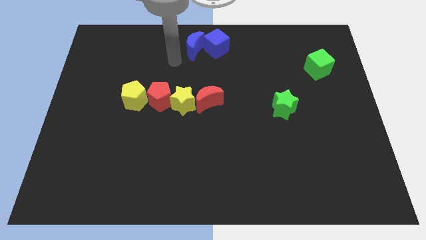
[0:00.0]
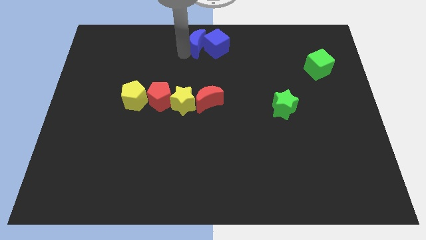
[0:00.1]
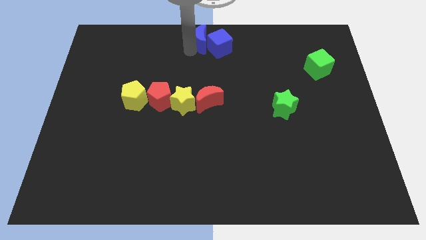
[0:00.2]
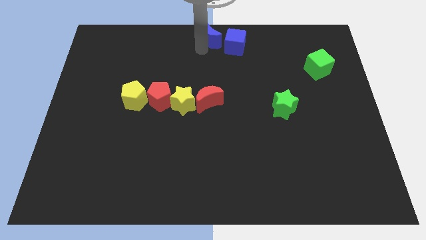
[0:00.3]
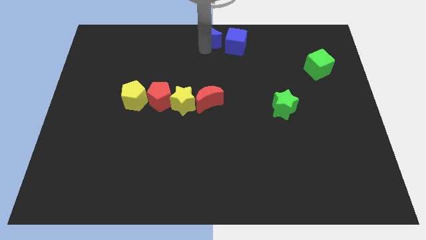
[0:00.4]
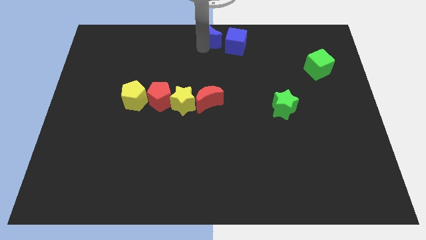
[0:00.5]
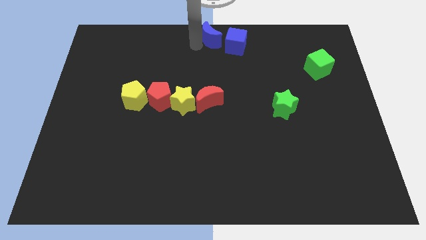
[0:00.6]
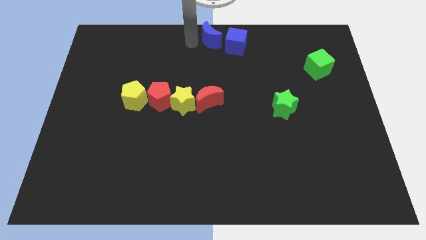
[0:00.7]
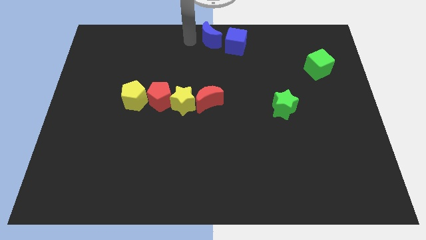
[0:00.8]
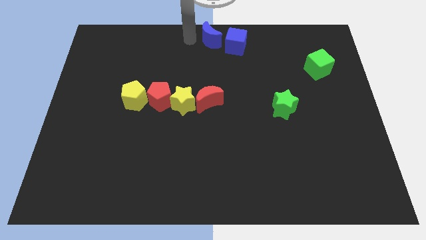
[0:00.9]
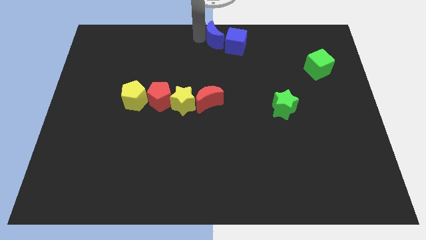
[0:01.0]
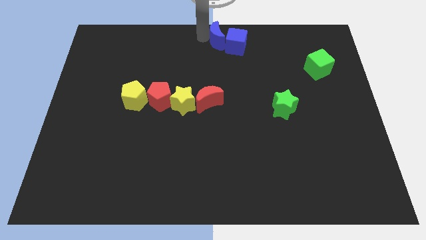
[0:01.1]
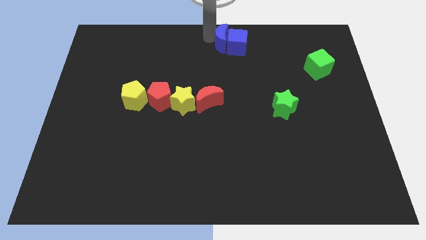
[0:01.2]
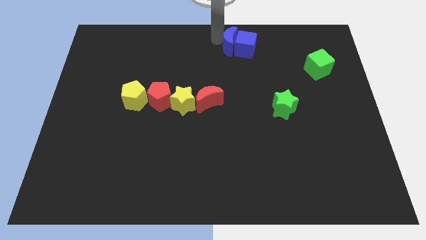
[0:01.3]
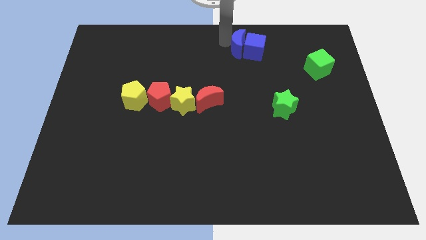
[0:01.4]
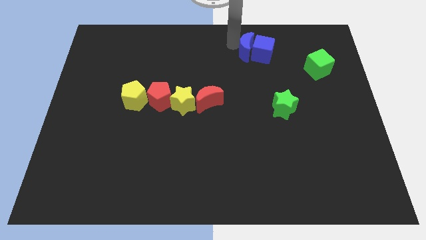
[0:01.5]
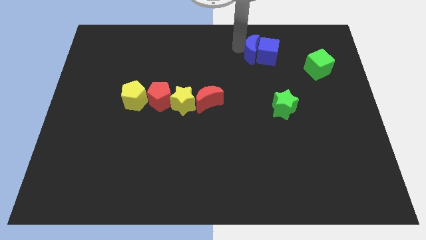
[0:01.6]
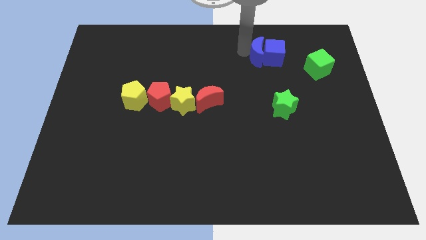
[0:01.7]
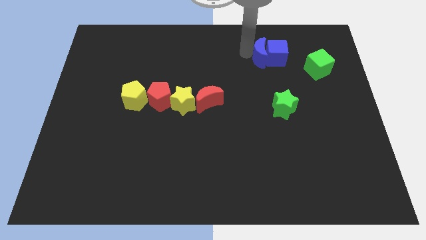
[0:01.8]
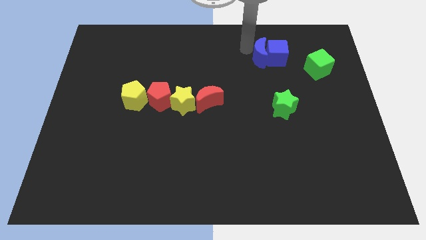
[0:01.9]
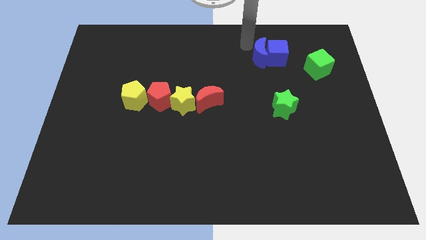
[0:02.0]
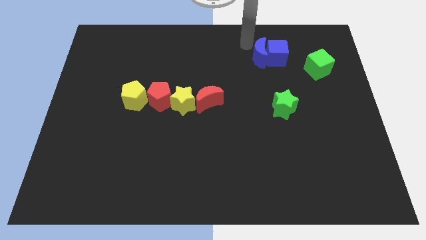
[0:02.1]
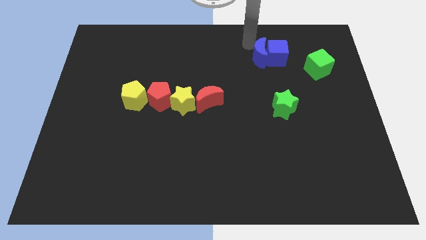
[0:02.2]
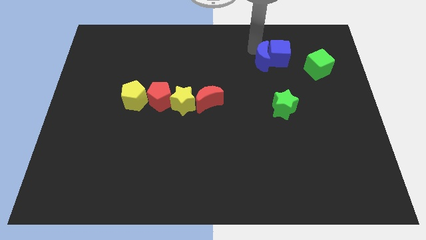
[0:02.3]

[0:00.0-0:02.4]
push the blue crescent into blue cube

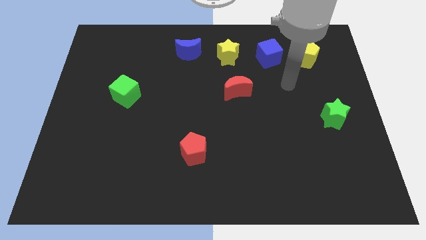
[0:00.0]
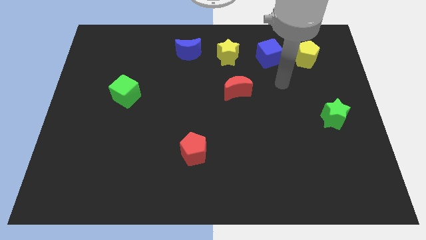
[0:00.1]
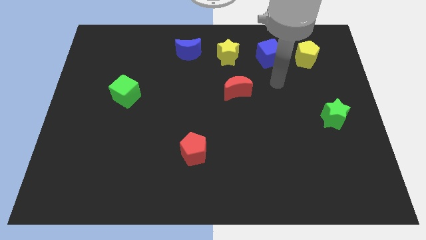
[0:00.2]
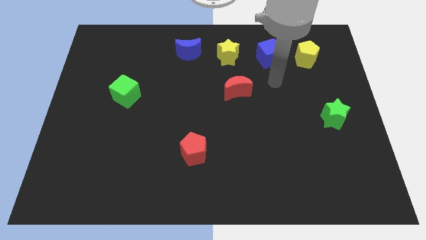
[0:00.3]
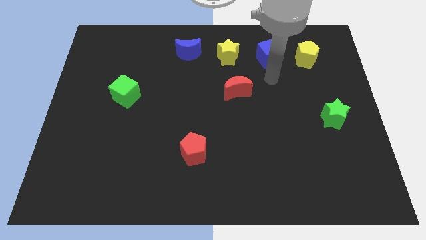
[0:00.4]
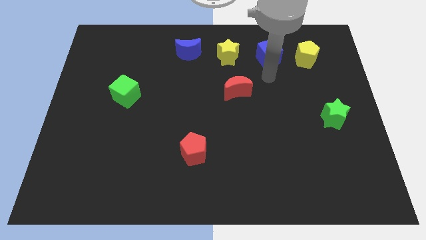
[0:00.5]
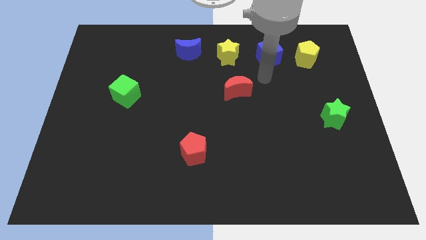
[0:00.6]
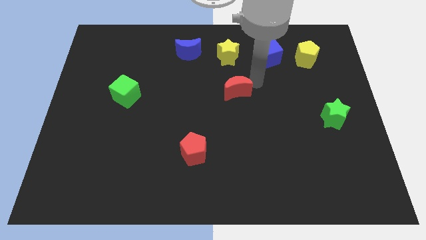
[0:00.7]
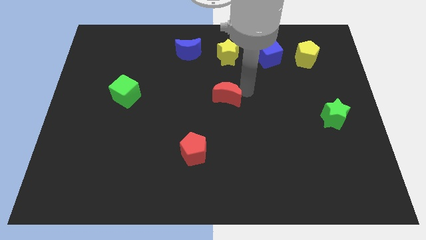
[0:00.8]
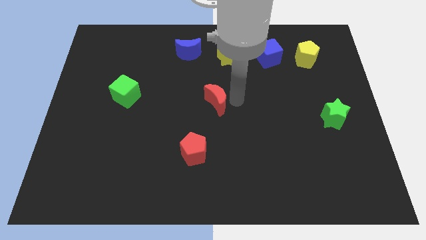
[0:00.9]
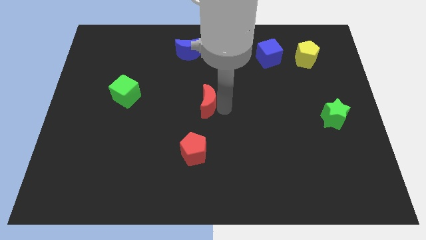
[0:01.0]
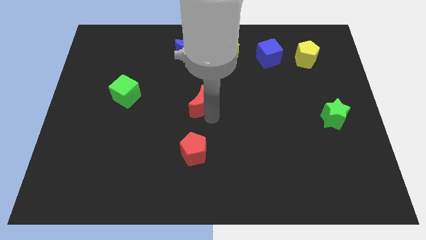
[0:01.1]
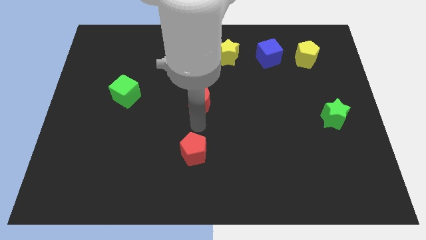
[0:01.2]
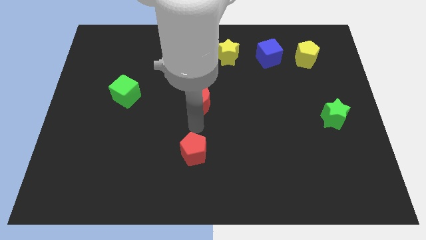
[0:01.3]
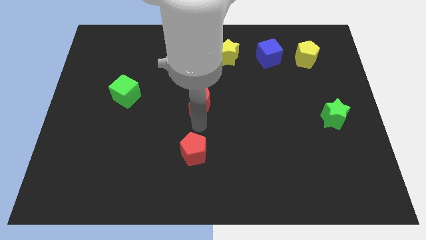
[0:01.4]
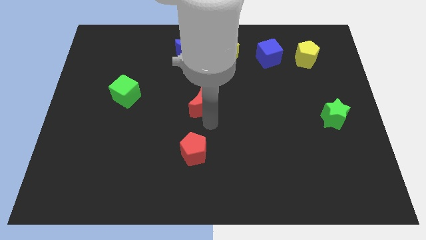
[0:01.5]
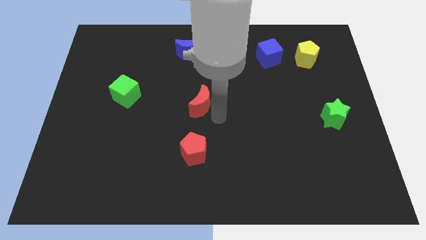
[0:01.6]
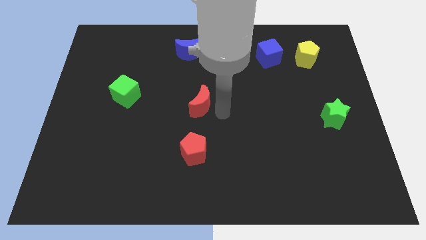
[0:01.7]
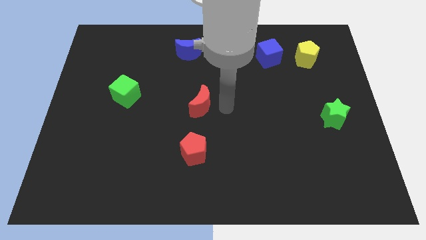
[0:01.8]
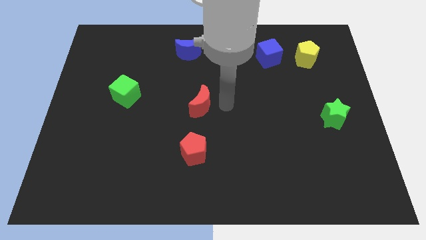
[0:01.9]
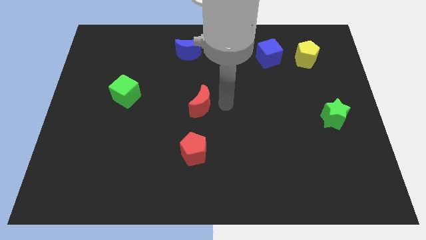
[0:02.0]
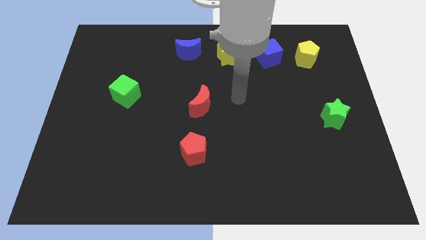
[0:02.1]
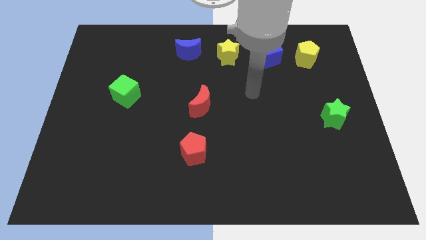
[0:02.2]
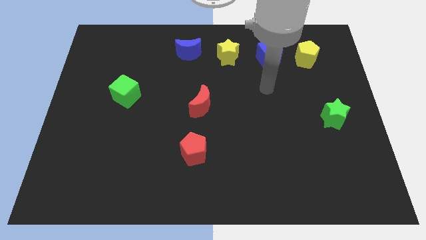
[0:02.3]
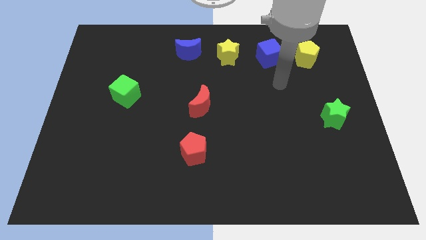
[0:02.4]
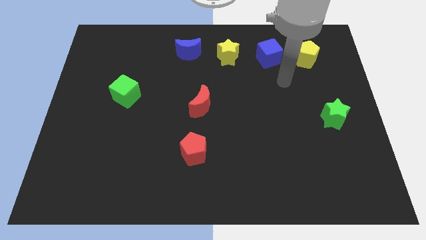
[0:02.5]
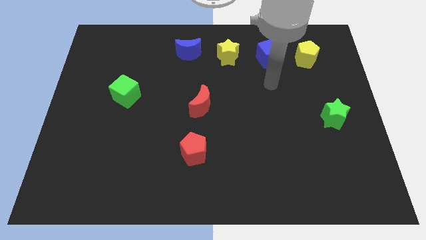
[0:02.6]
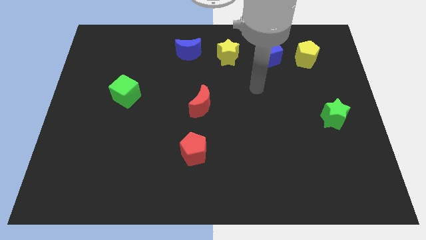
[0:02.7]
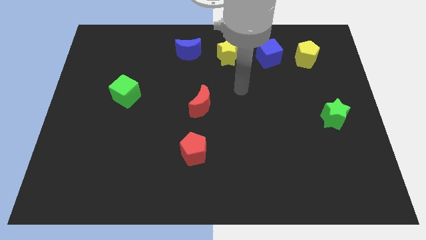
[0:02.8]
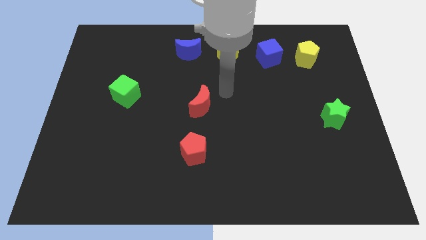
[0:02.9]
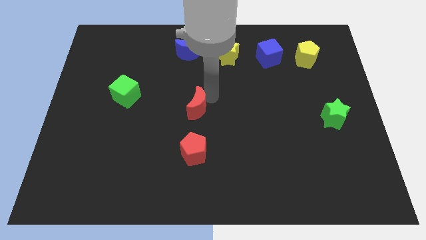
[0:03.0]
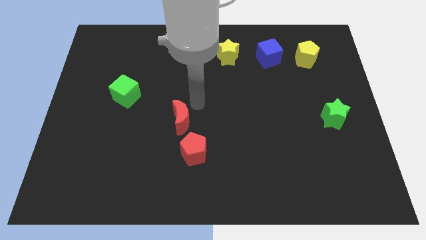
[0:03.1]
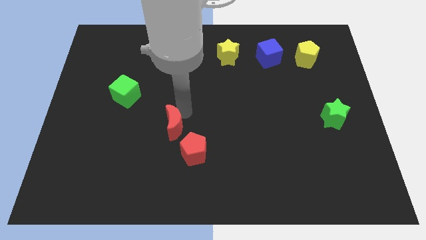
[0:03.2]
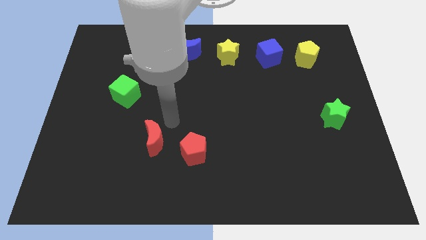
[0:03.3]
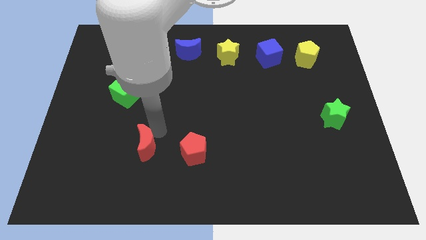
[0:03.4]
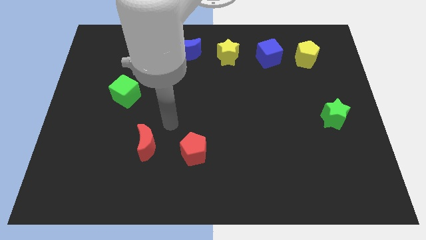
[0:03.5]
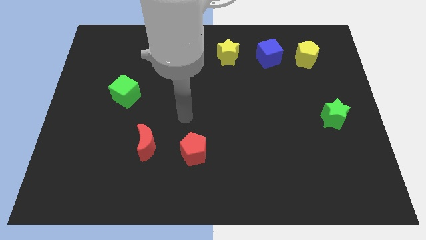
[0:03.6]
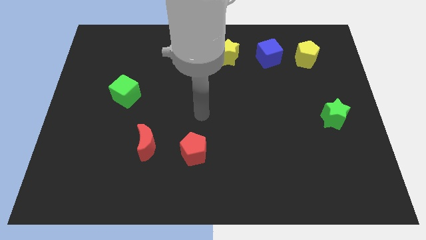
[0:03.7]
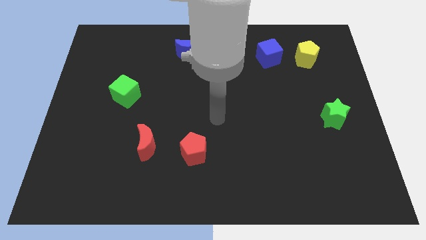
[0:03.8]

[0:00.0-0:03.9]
move the red crescent parallel to red pentagon

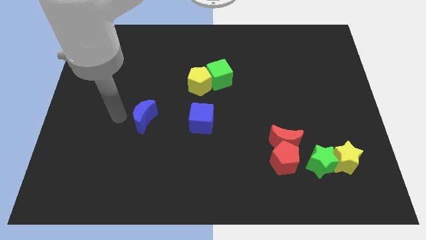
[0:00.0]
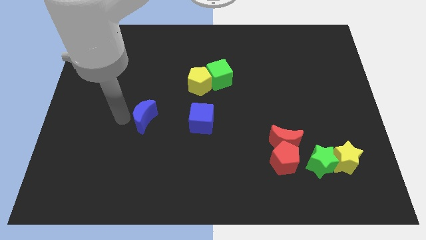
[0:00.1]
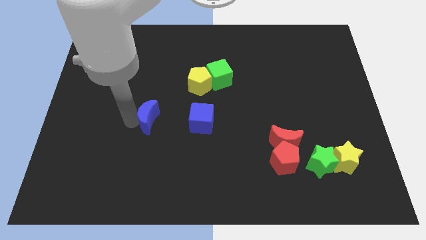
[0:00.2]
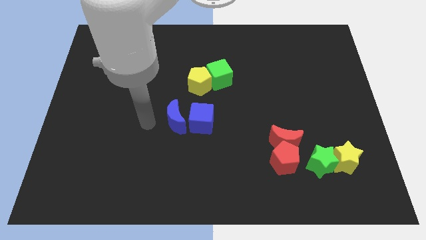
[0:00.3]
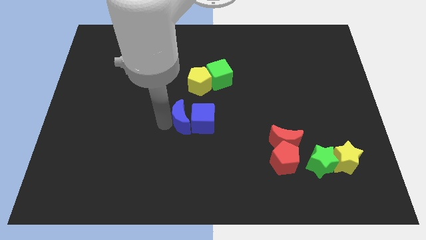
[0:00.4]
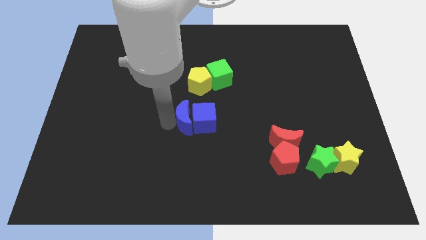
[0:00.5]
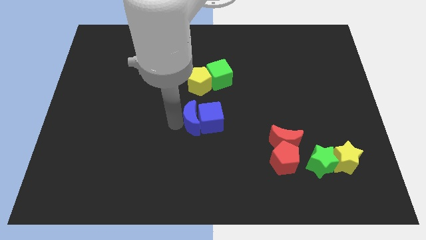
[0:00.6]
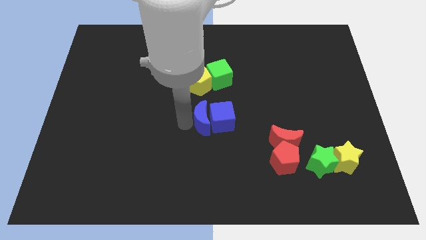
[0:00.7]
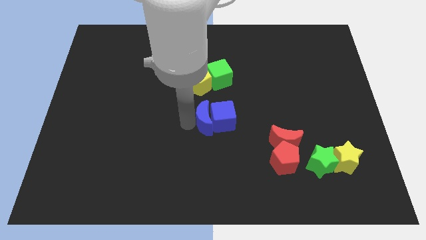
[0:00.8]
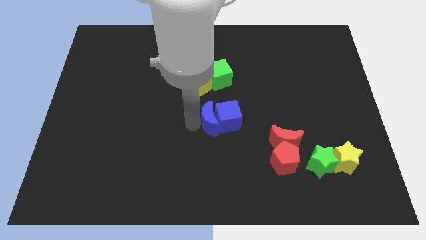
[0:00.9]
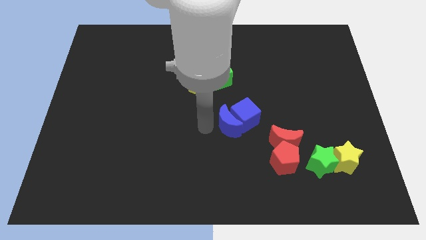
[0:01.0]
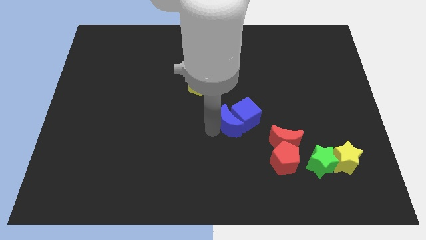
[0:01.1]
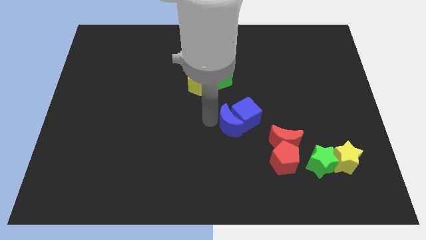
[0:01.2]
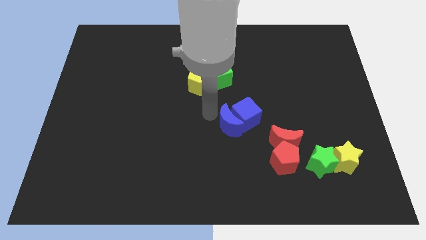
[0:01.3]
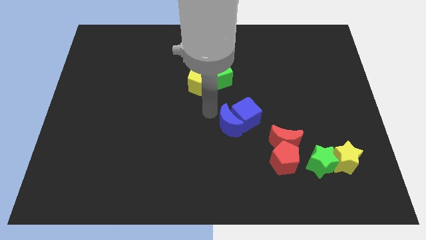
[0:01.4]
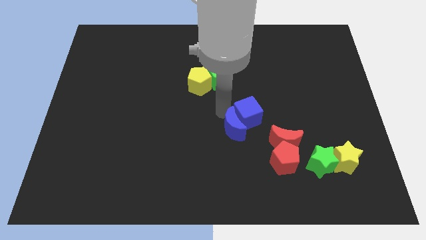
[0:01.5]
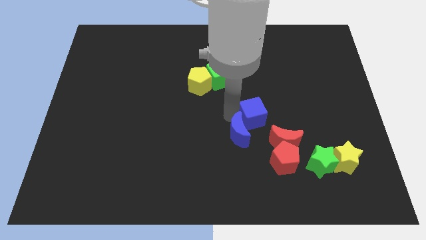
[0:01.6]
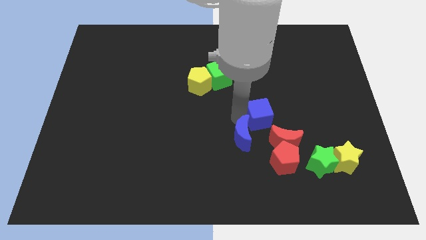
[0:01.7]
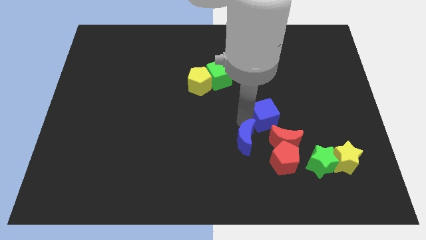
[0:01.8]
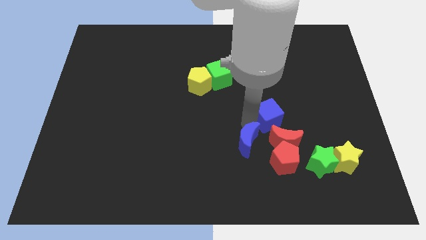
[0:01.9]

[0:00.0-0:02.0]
push the blue moon into the blue cube

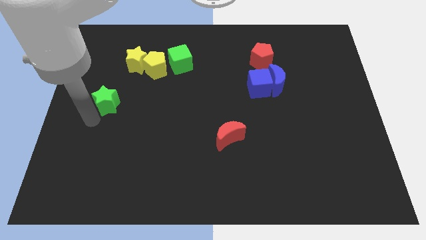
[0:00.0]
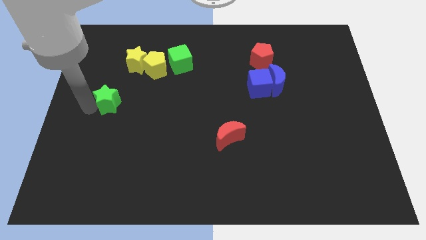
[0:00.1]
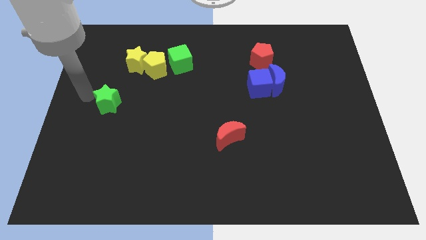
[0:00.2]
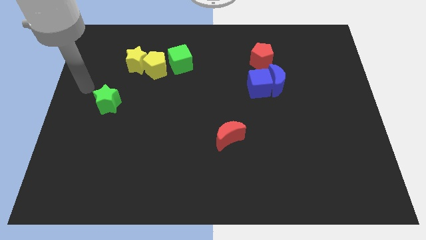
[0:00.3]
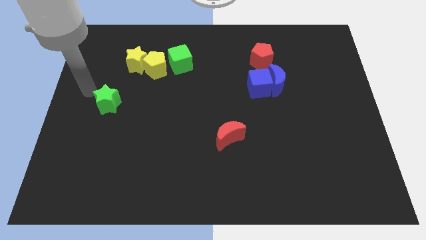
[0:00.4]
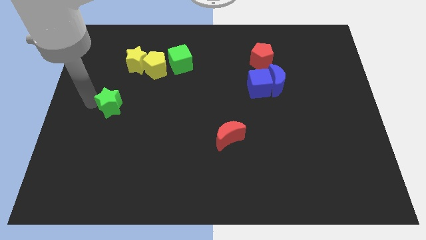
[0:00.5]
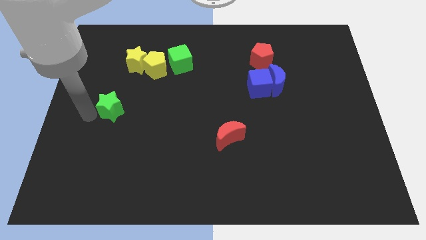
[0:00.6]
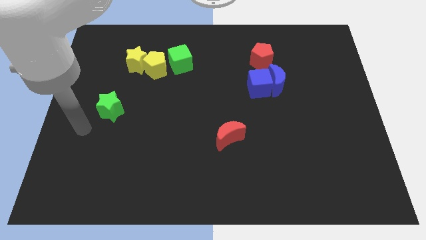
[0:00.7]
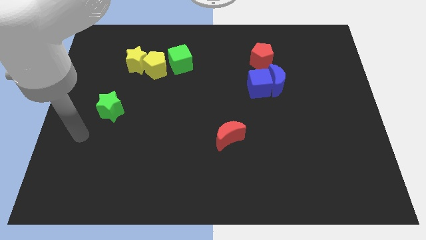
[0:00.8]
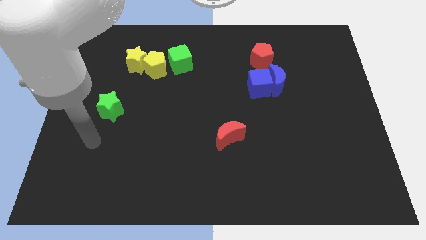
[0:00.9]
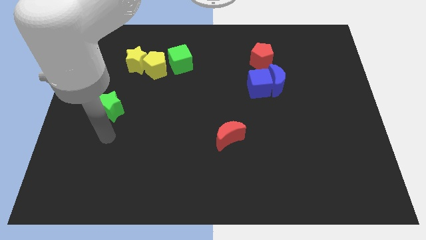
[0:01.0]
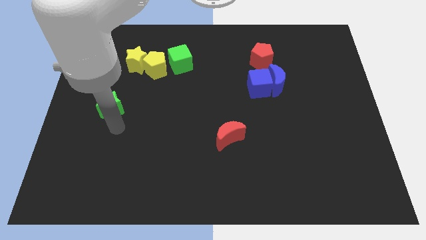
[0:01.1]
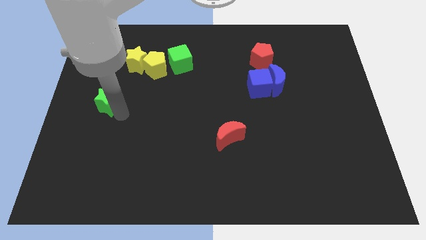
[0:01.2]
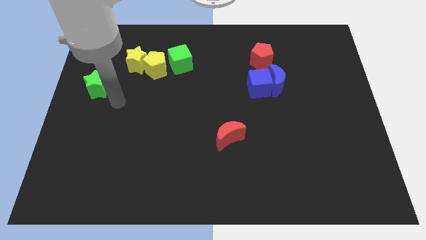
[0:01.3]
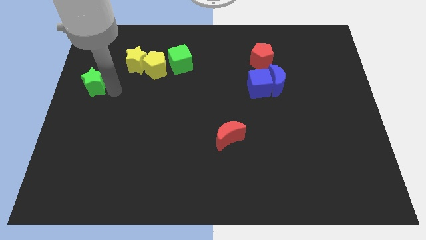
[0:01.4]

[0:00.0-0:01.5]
push the green star slightly to the top side of the board
